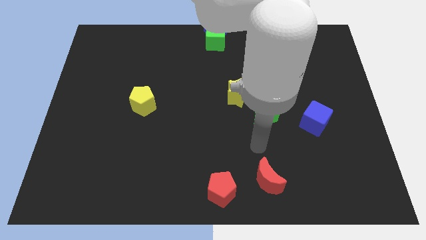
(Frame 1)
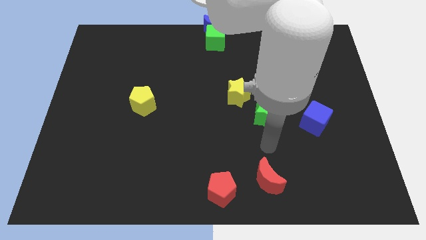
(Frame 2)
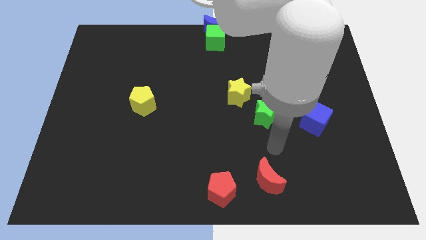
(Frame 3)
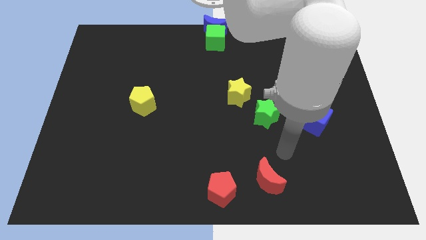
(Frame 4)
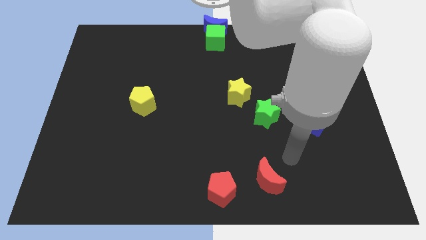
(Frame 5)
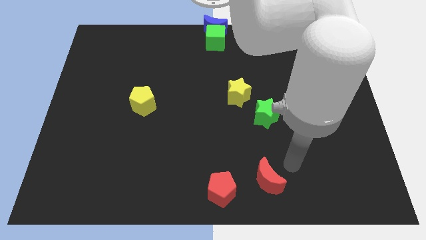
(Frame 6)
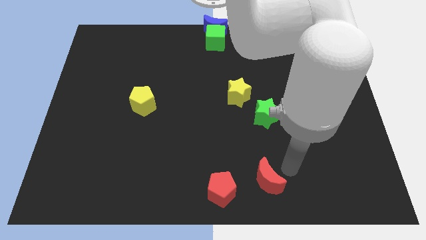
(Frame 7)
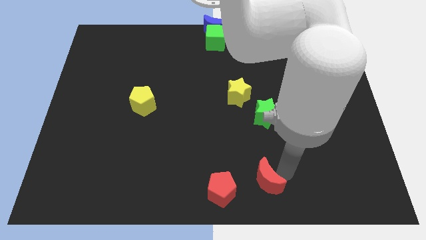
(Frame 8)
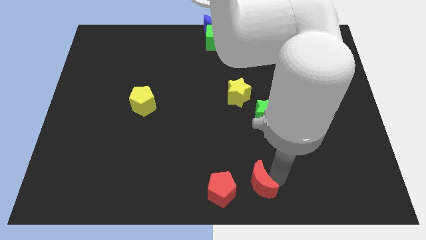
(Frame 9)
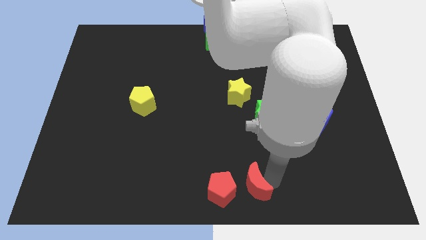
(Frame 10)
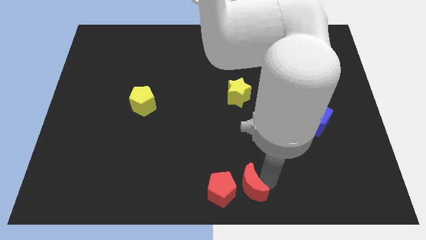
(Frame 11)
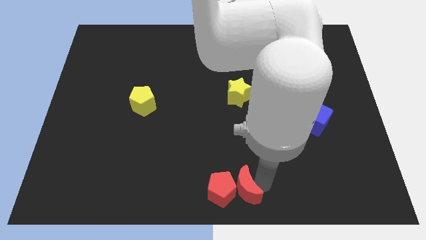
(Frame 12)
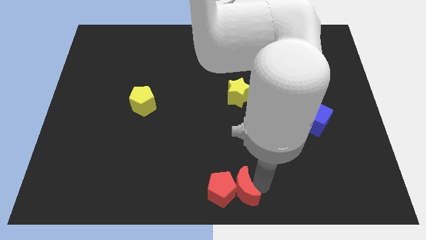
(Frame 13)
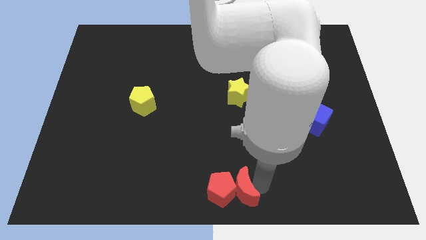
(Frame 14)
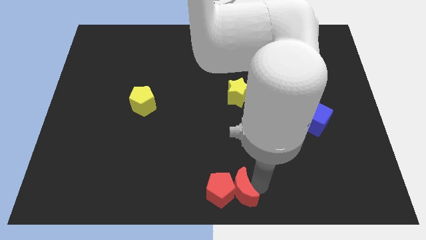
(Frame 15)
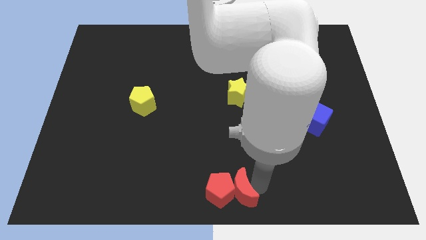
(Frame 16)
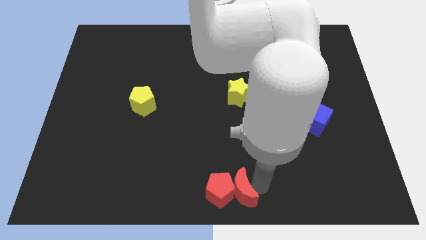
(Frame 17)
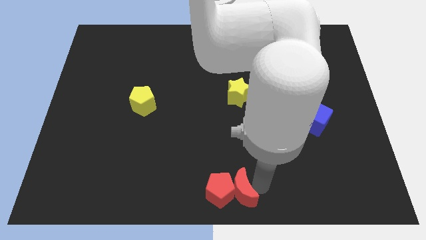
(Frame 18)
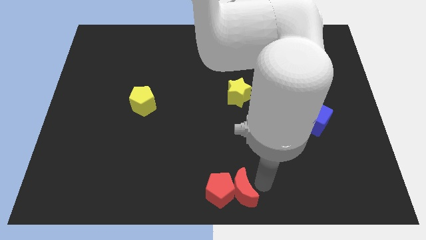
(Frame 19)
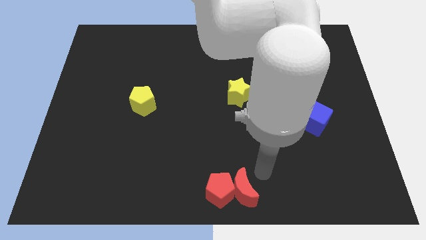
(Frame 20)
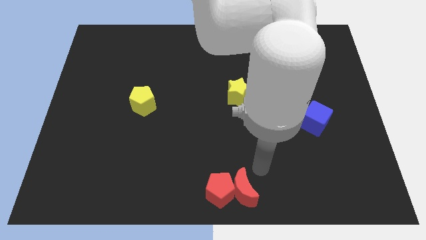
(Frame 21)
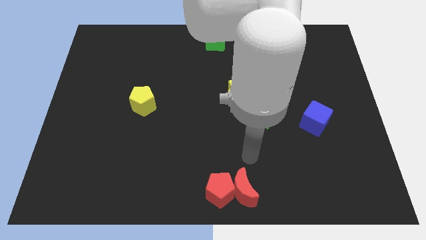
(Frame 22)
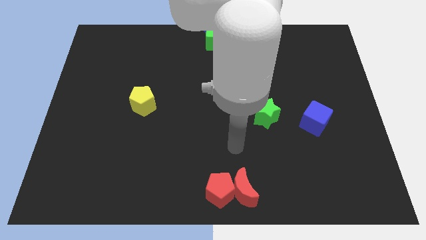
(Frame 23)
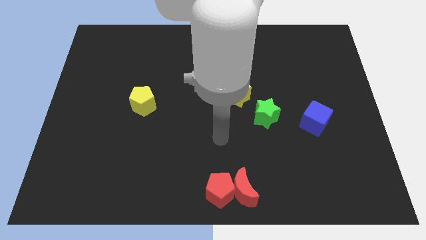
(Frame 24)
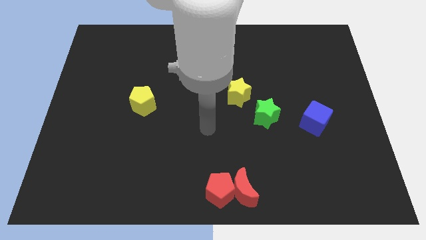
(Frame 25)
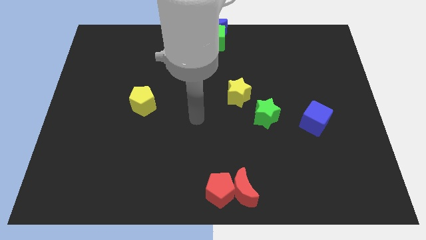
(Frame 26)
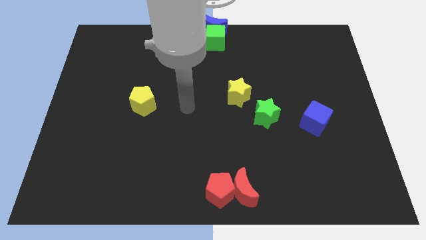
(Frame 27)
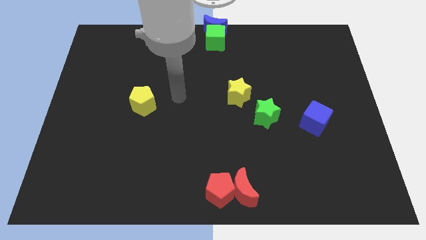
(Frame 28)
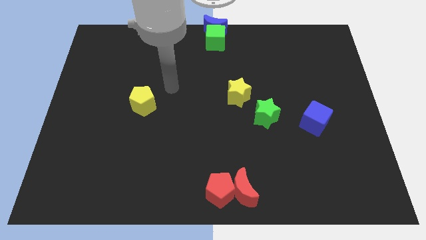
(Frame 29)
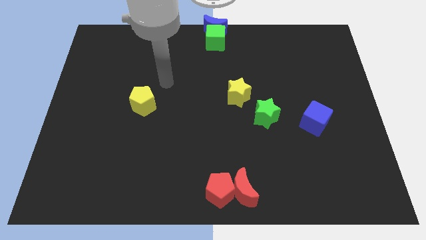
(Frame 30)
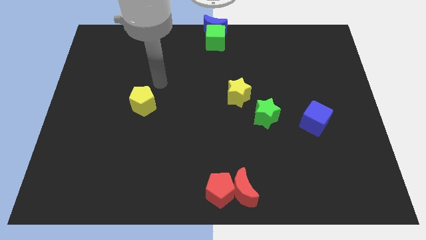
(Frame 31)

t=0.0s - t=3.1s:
push red moon into red pentagon

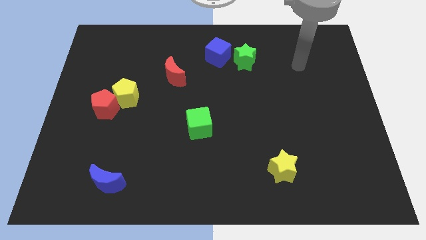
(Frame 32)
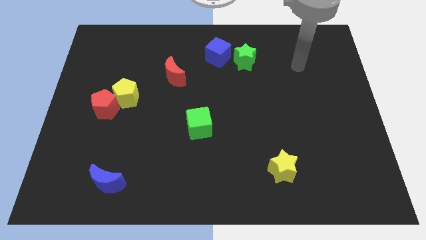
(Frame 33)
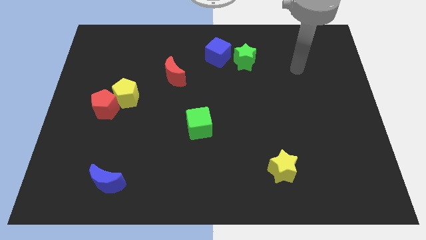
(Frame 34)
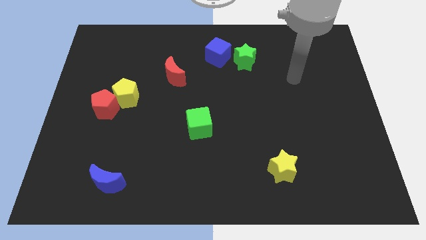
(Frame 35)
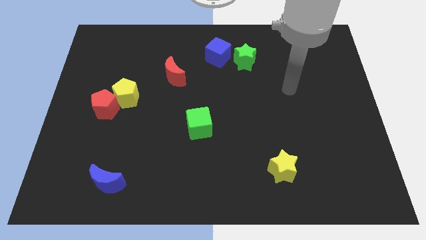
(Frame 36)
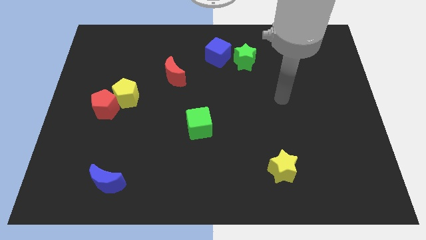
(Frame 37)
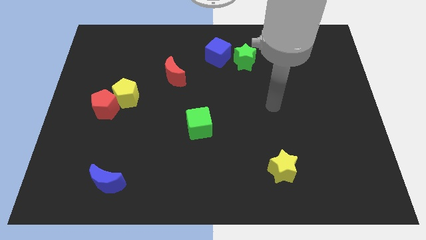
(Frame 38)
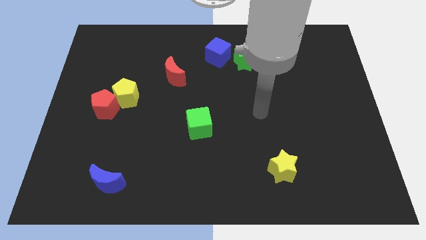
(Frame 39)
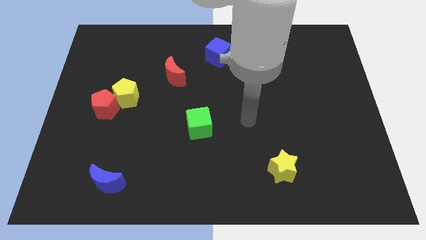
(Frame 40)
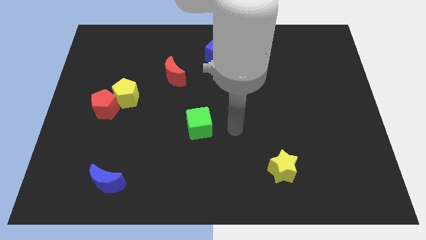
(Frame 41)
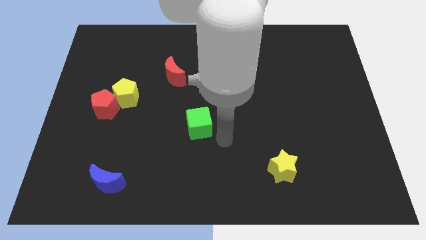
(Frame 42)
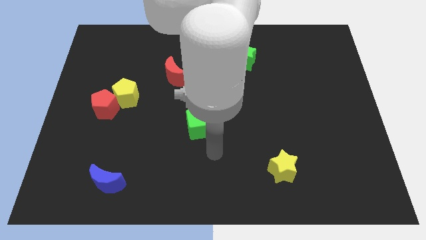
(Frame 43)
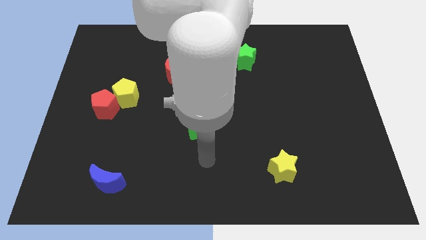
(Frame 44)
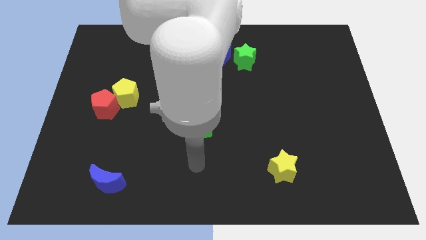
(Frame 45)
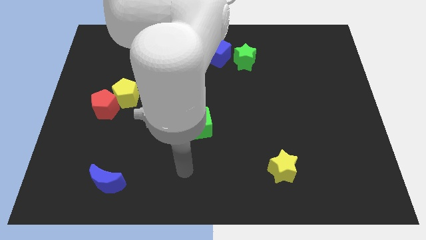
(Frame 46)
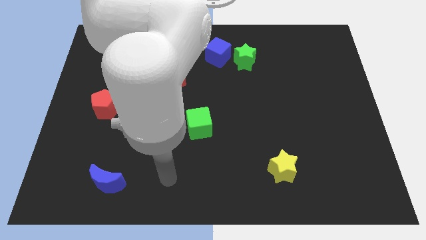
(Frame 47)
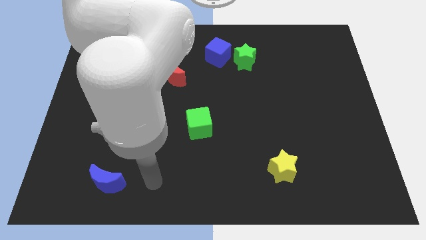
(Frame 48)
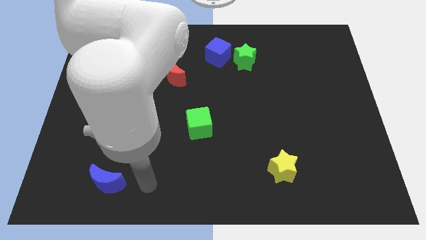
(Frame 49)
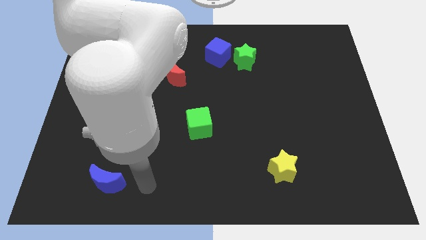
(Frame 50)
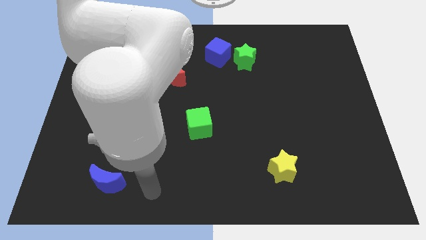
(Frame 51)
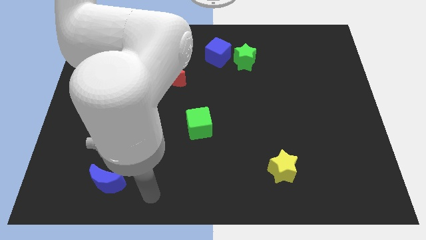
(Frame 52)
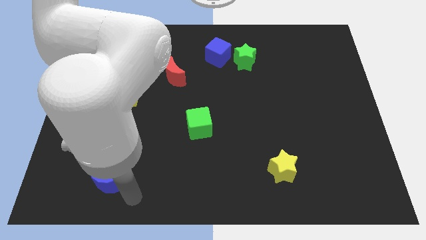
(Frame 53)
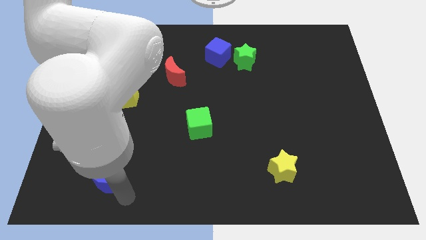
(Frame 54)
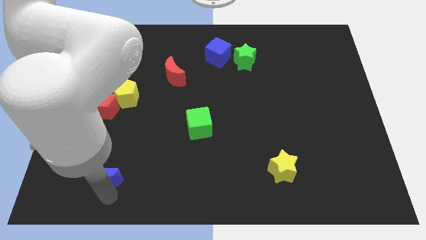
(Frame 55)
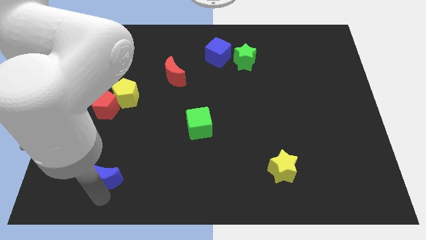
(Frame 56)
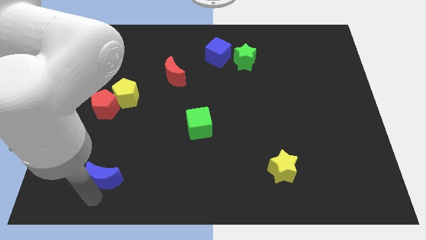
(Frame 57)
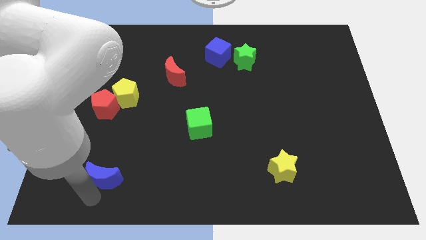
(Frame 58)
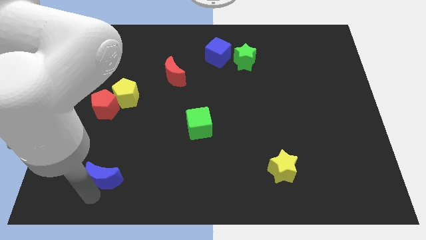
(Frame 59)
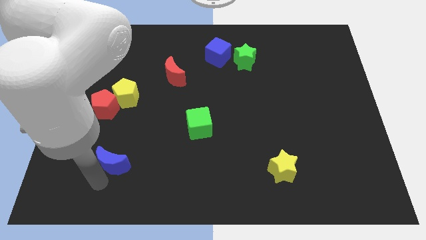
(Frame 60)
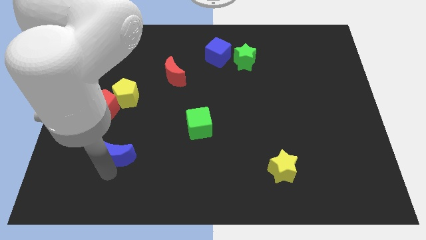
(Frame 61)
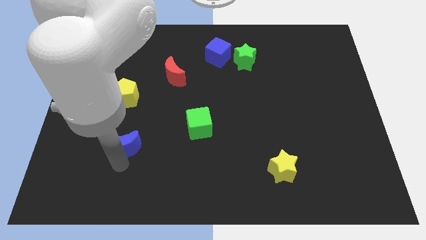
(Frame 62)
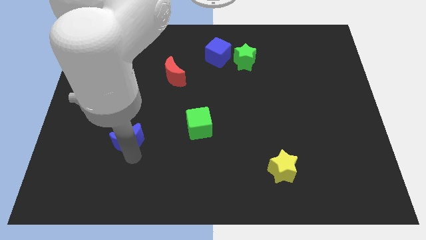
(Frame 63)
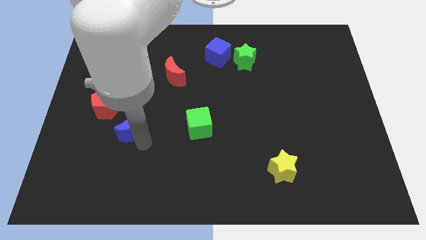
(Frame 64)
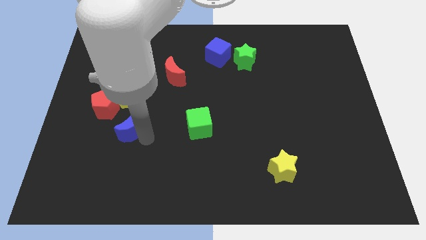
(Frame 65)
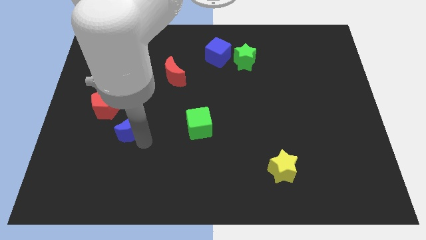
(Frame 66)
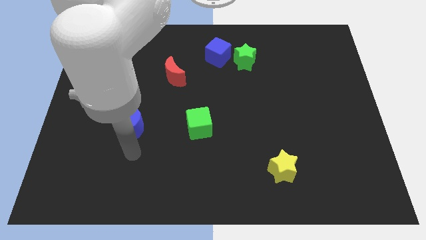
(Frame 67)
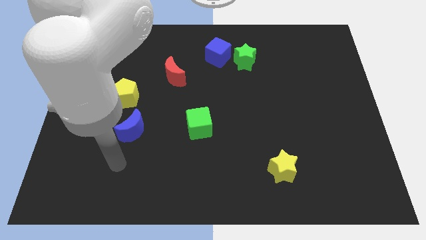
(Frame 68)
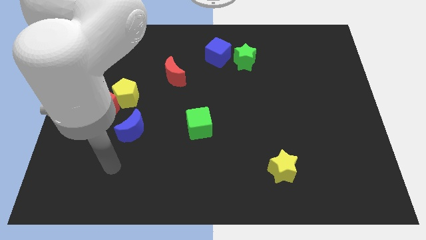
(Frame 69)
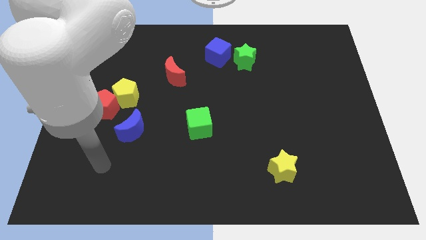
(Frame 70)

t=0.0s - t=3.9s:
push the blue moon to the horizontal left of the green cube

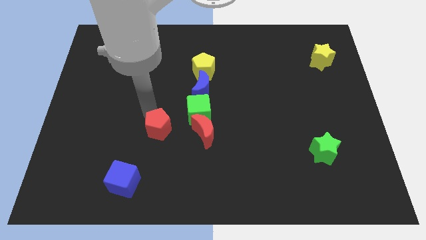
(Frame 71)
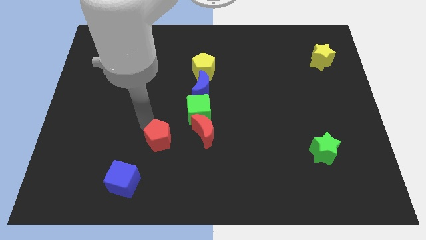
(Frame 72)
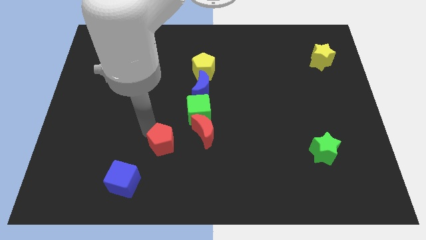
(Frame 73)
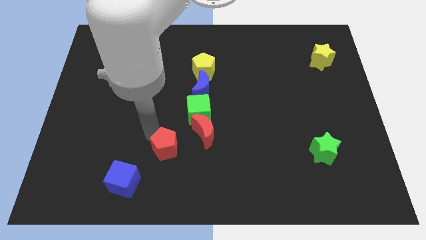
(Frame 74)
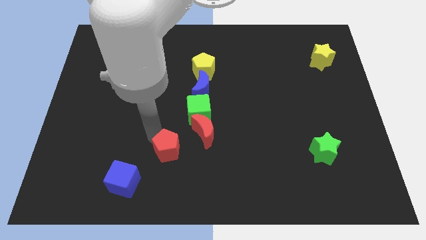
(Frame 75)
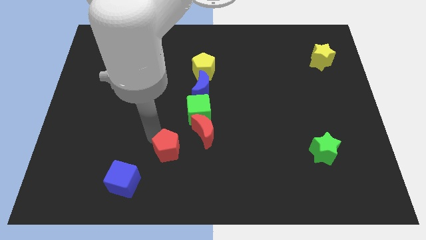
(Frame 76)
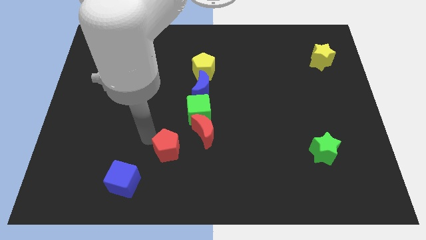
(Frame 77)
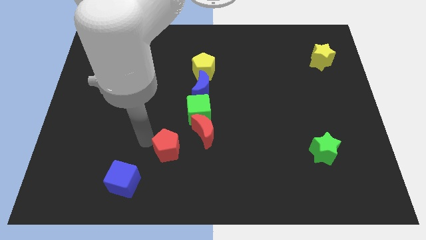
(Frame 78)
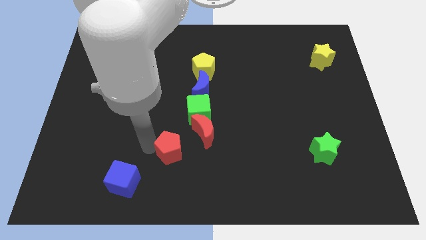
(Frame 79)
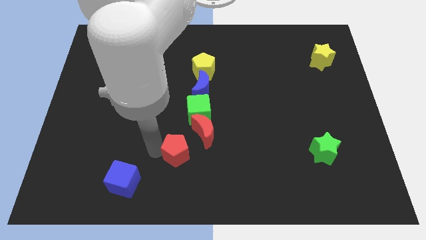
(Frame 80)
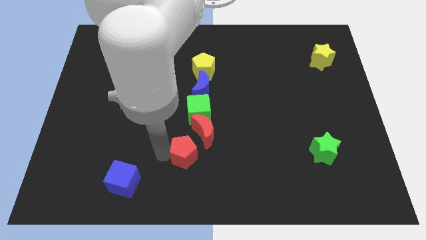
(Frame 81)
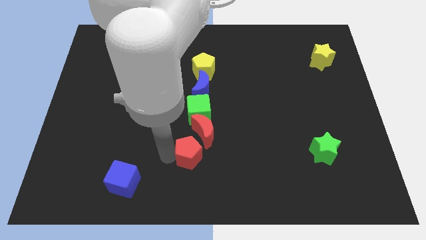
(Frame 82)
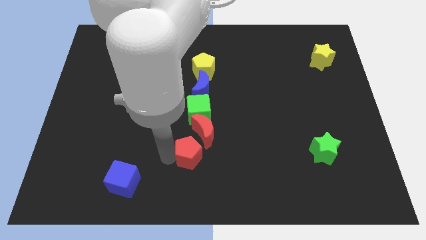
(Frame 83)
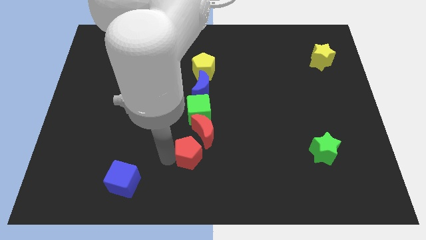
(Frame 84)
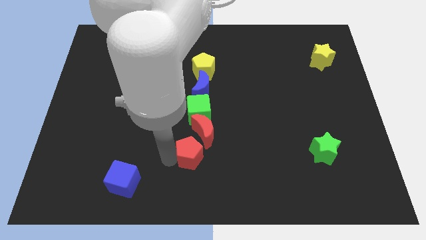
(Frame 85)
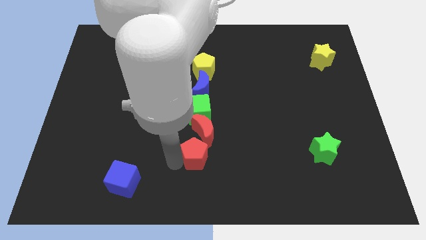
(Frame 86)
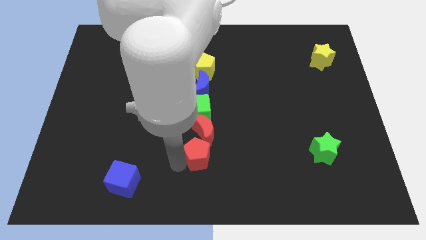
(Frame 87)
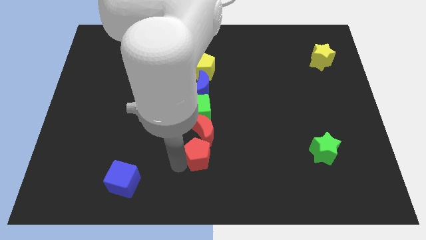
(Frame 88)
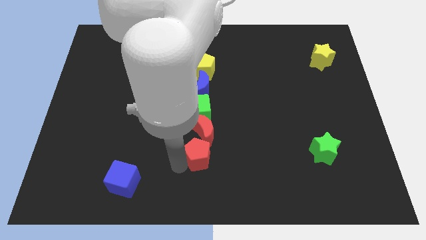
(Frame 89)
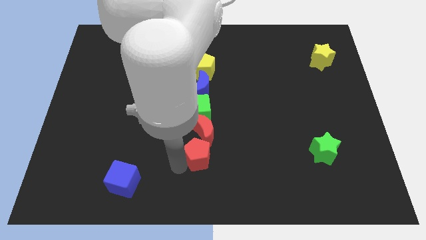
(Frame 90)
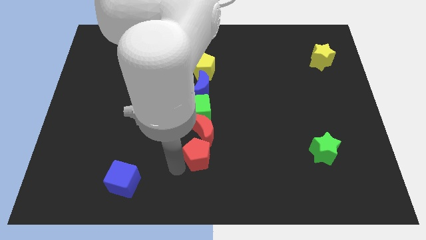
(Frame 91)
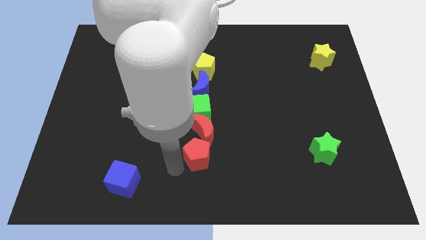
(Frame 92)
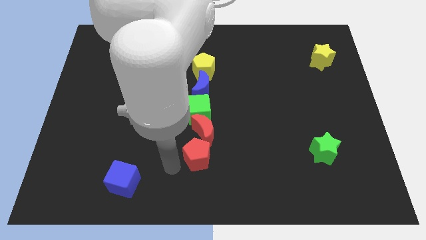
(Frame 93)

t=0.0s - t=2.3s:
slide the red pentagon to the bottom of the red moon
